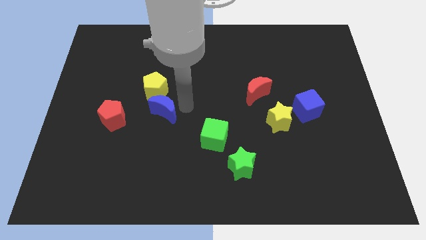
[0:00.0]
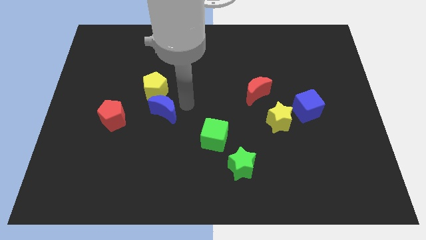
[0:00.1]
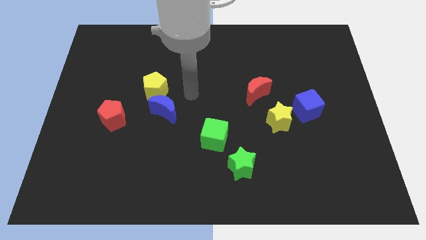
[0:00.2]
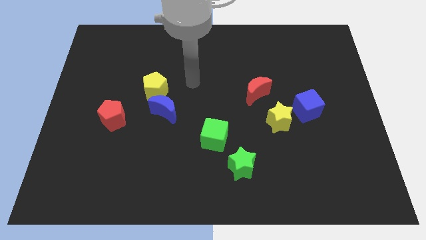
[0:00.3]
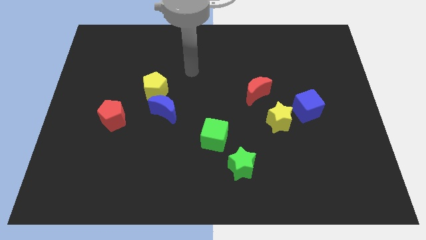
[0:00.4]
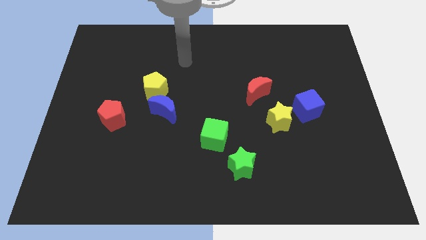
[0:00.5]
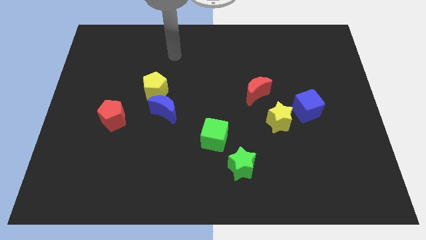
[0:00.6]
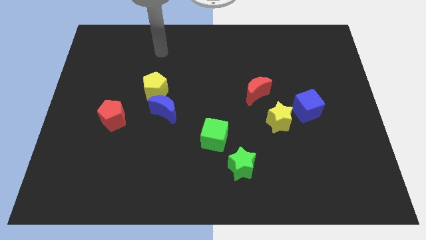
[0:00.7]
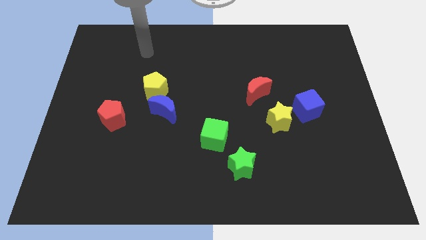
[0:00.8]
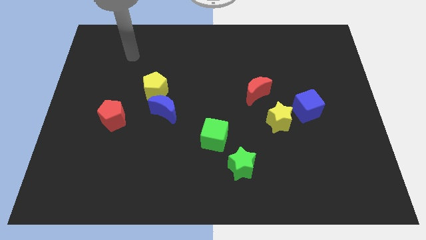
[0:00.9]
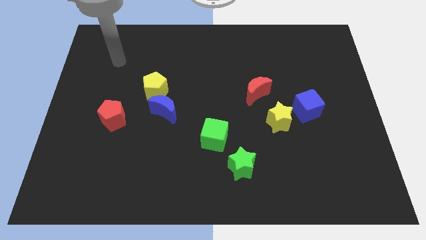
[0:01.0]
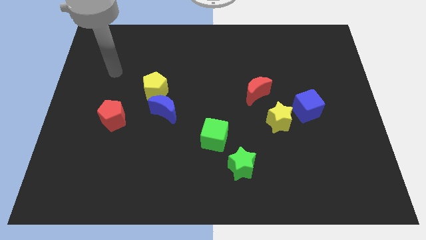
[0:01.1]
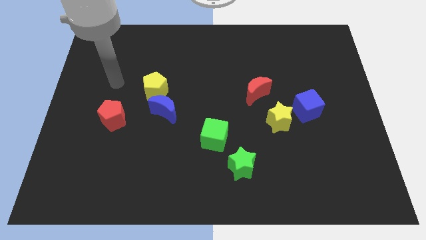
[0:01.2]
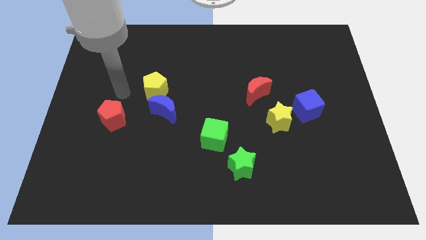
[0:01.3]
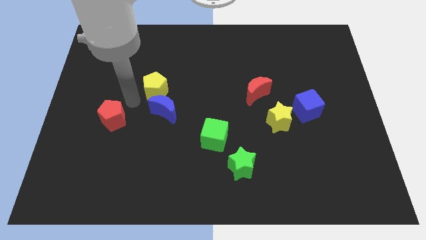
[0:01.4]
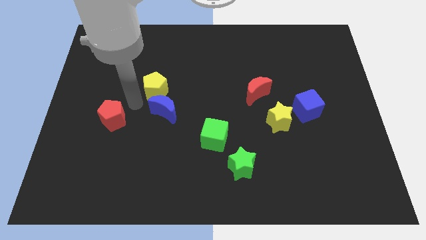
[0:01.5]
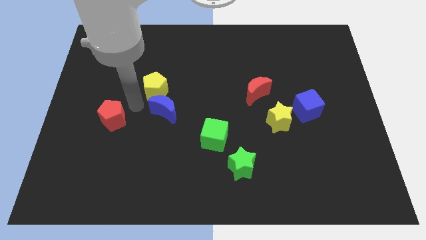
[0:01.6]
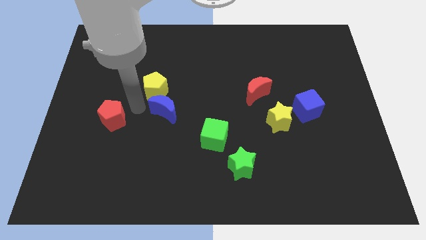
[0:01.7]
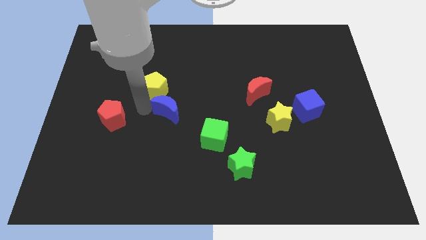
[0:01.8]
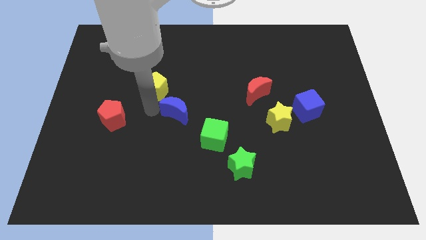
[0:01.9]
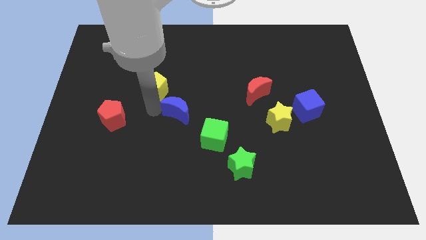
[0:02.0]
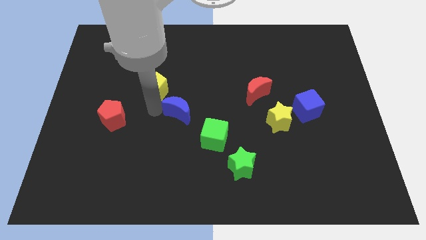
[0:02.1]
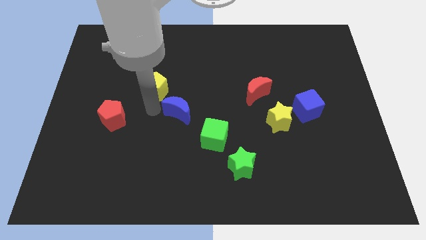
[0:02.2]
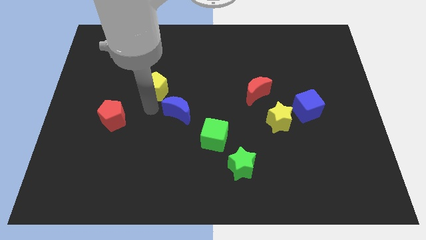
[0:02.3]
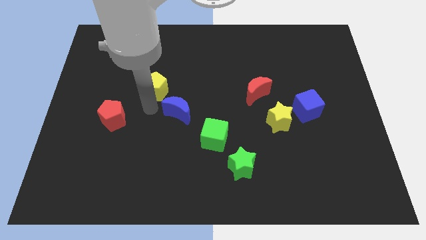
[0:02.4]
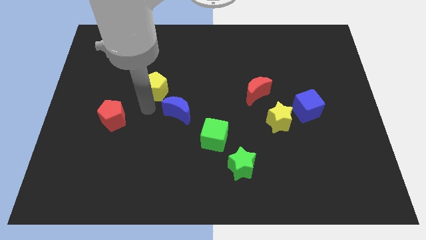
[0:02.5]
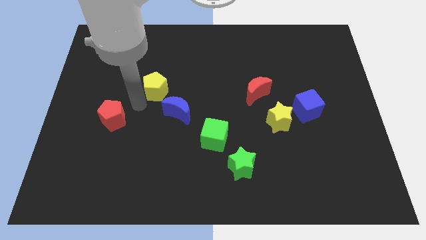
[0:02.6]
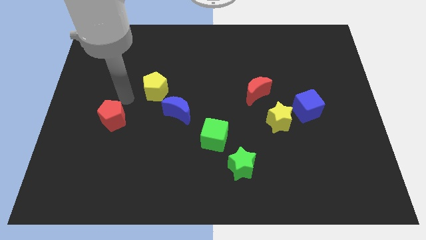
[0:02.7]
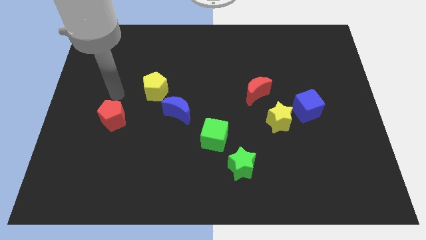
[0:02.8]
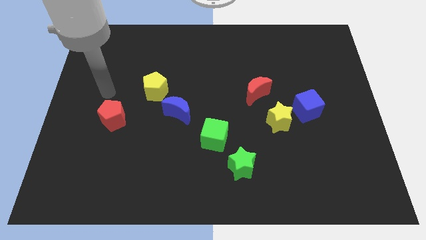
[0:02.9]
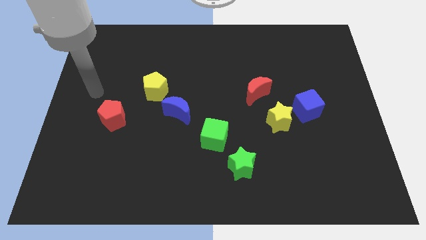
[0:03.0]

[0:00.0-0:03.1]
move the blue moon between the yellow pentagon and the green cube

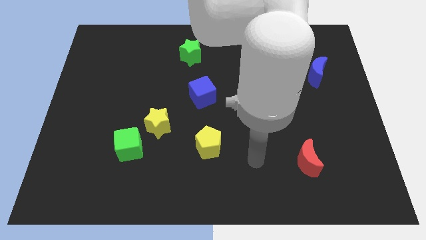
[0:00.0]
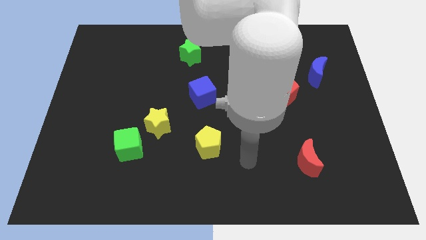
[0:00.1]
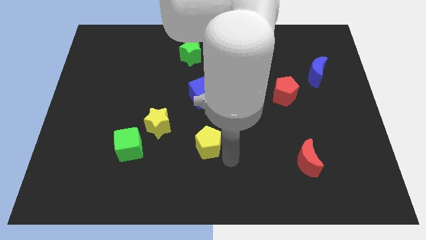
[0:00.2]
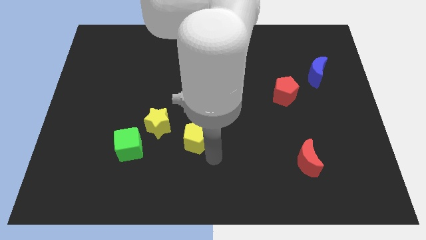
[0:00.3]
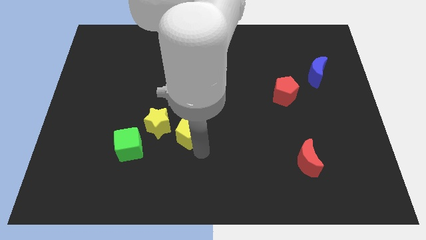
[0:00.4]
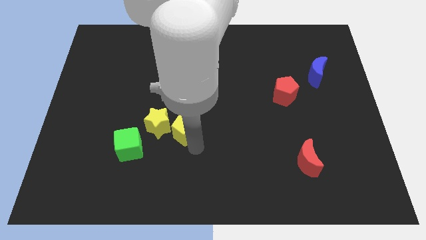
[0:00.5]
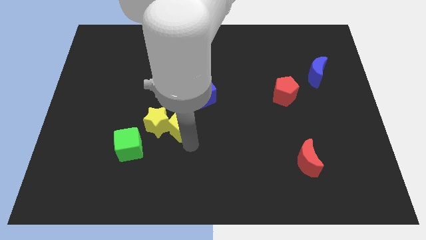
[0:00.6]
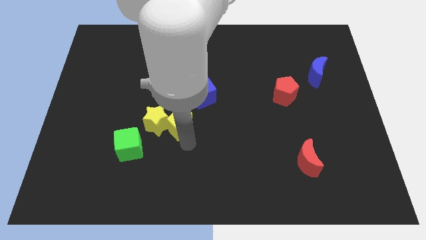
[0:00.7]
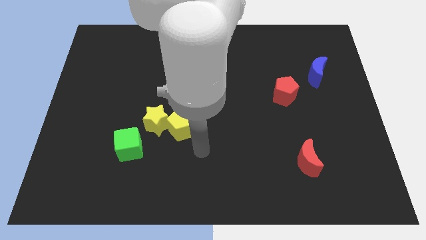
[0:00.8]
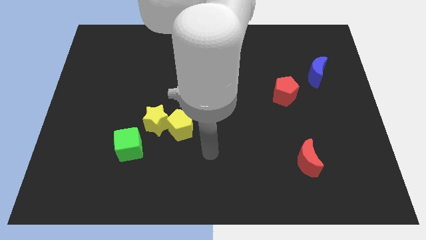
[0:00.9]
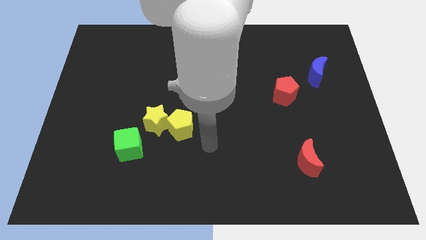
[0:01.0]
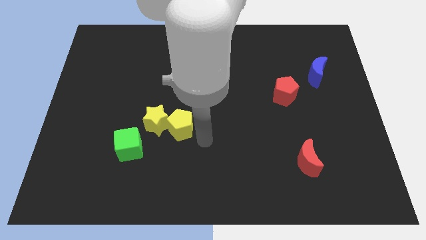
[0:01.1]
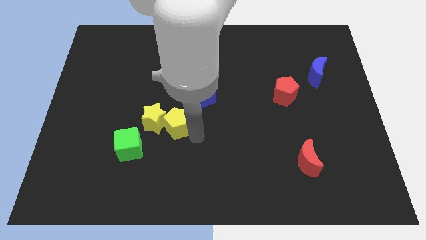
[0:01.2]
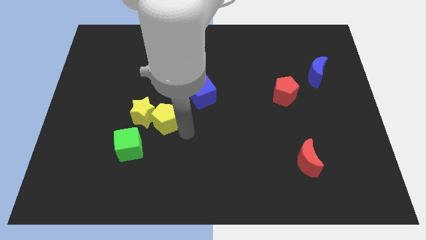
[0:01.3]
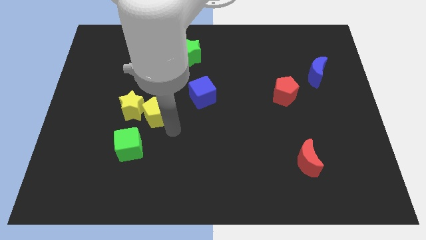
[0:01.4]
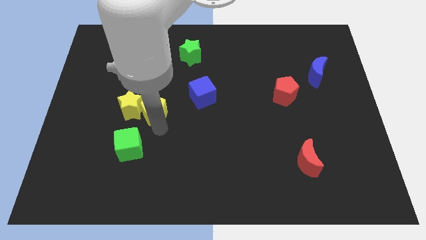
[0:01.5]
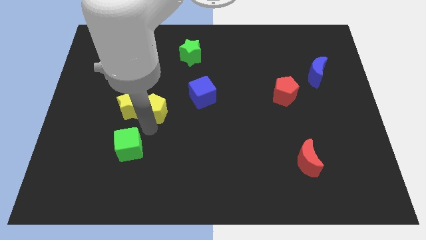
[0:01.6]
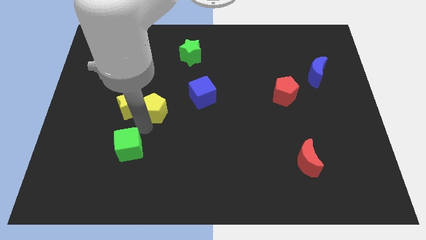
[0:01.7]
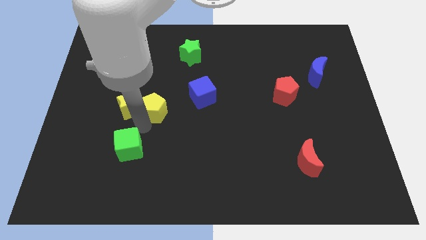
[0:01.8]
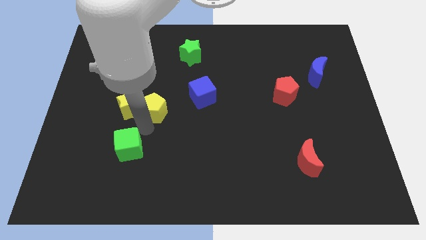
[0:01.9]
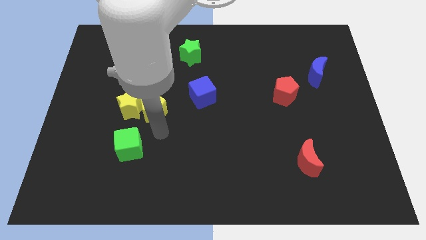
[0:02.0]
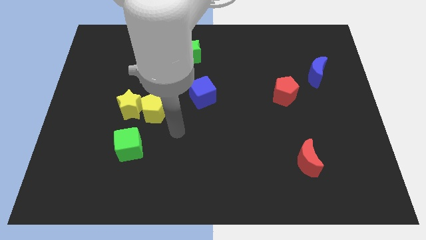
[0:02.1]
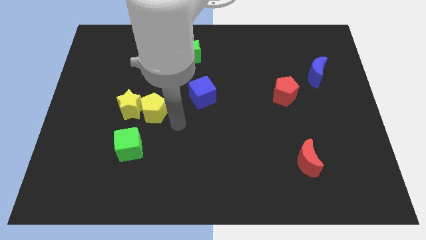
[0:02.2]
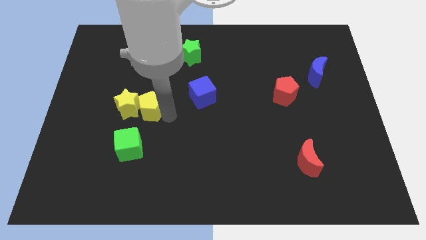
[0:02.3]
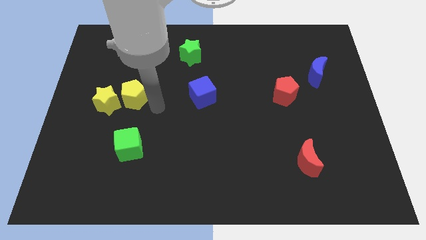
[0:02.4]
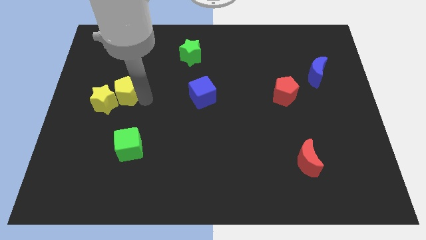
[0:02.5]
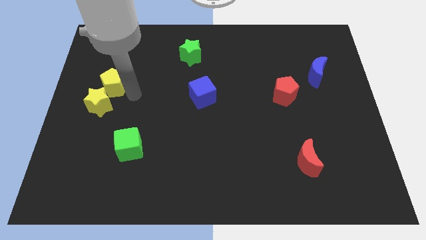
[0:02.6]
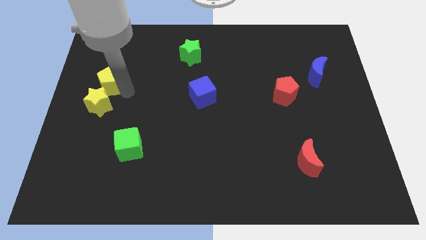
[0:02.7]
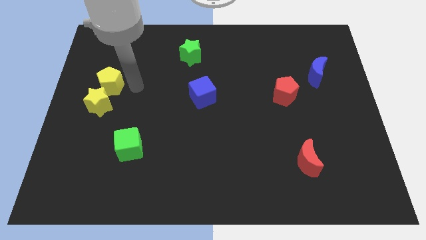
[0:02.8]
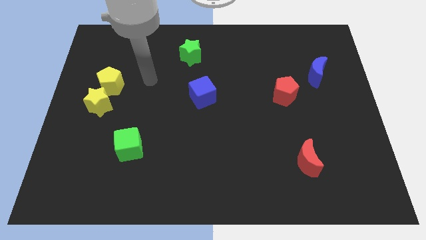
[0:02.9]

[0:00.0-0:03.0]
place the yellow pentagon above the yellow star

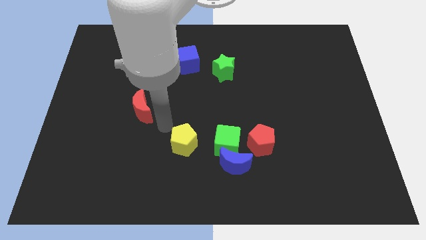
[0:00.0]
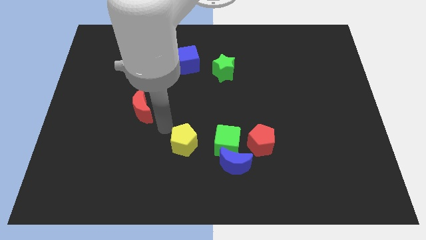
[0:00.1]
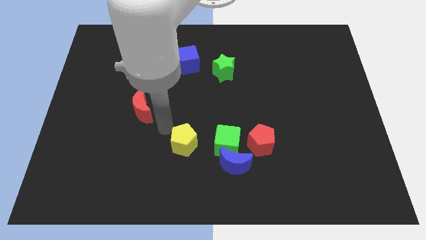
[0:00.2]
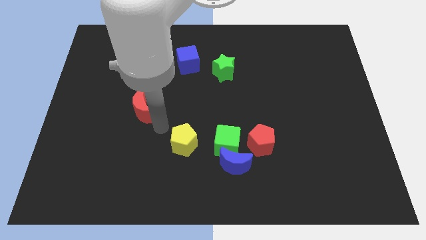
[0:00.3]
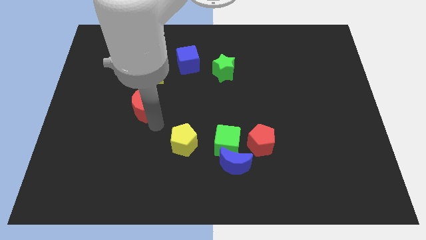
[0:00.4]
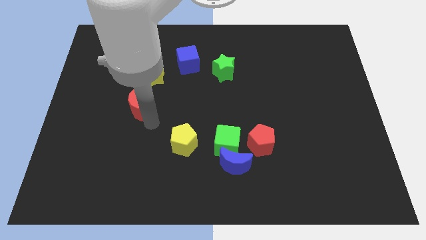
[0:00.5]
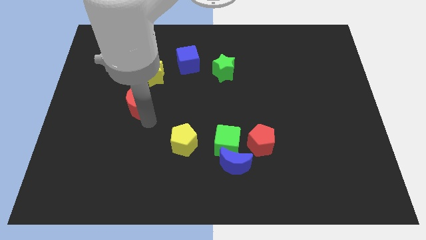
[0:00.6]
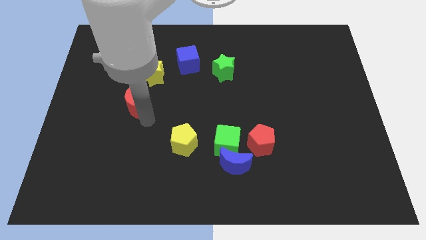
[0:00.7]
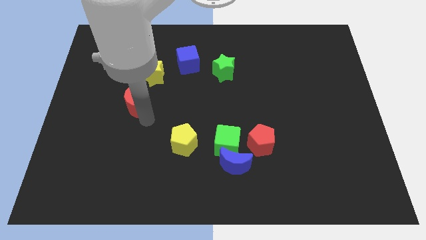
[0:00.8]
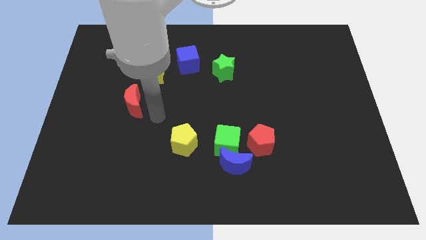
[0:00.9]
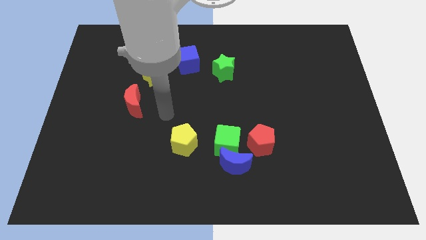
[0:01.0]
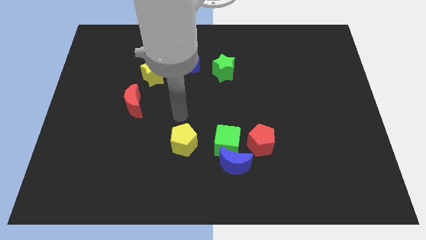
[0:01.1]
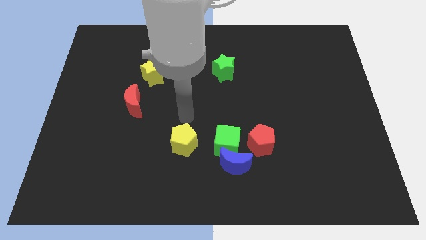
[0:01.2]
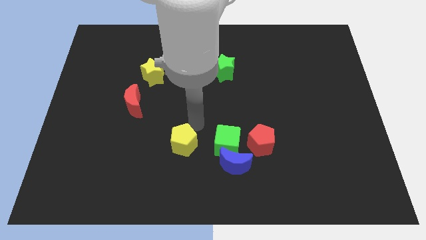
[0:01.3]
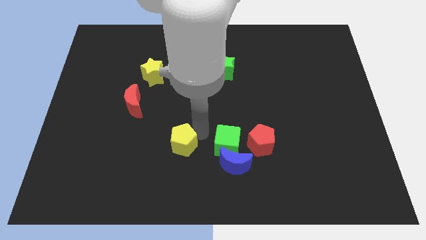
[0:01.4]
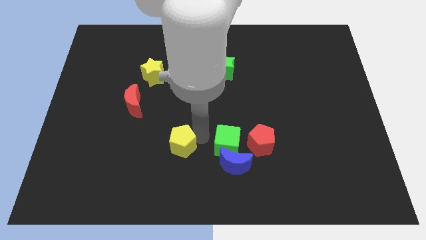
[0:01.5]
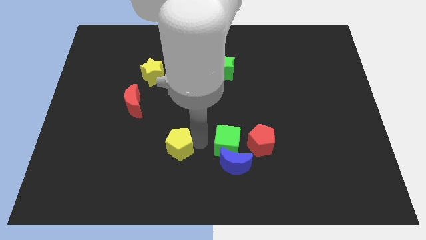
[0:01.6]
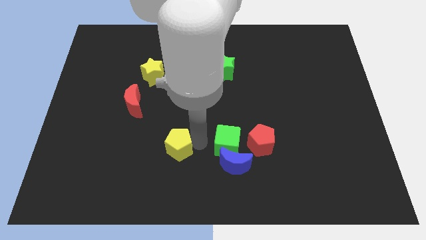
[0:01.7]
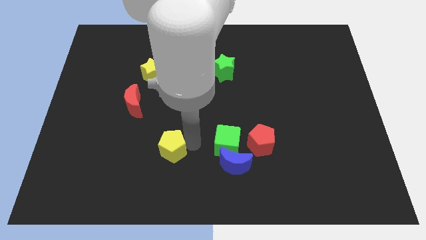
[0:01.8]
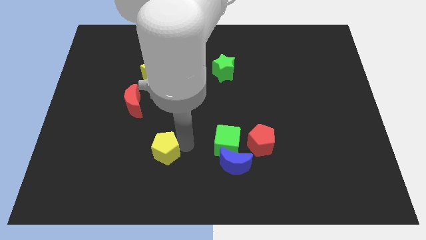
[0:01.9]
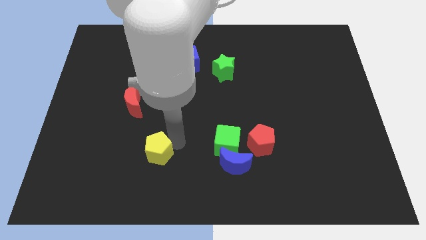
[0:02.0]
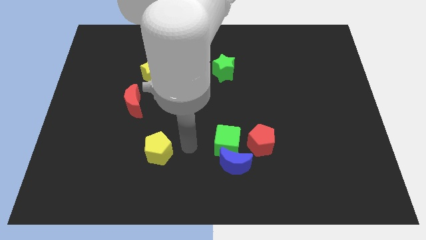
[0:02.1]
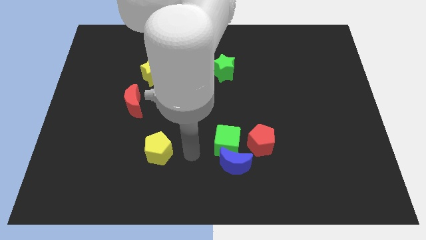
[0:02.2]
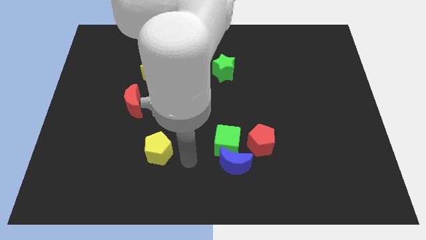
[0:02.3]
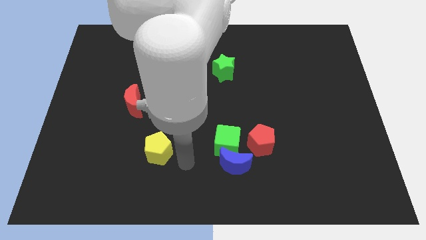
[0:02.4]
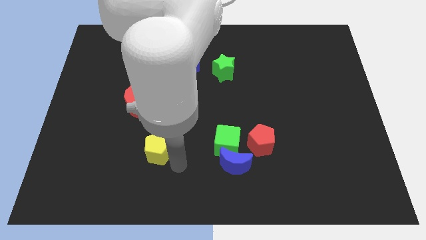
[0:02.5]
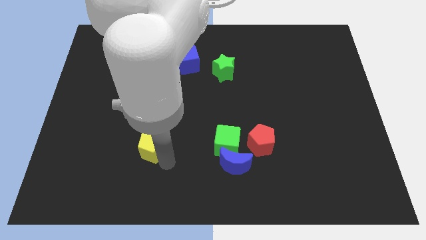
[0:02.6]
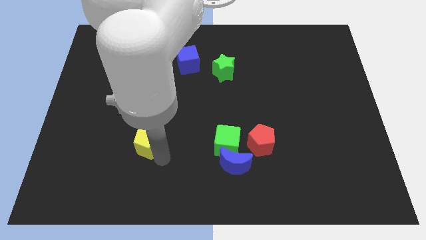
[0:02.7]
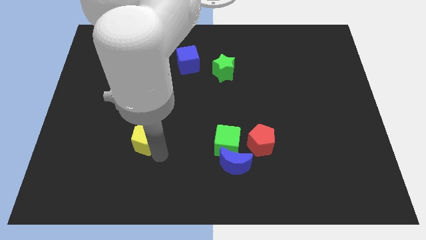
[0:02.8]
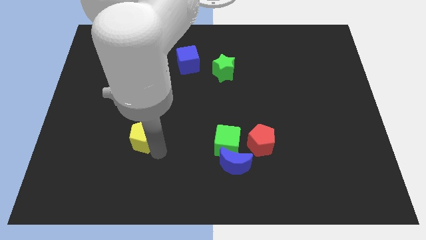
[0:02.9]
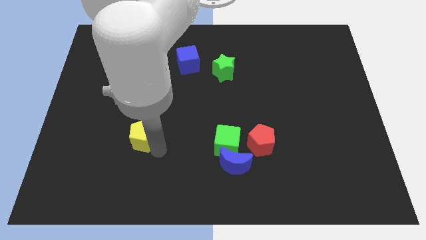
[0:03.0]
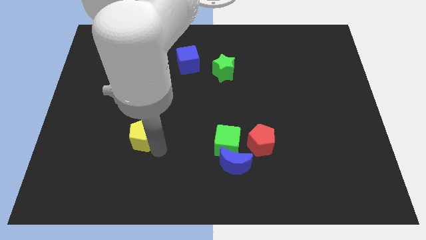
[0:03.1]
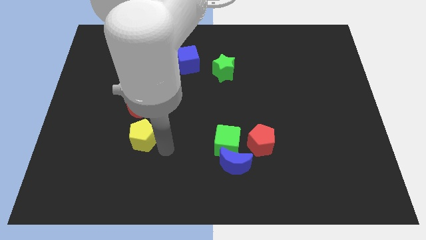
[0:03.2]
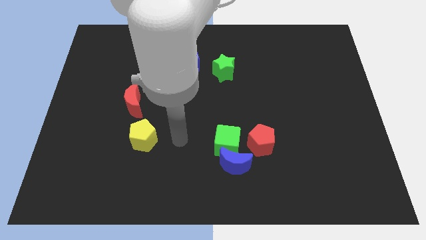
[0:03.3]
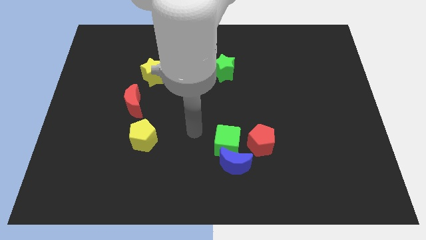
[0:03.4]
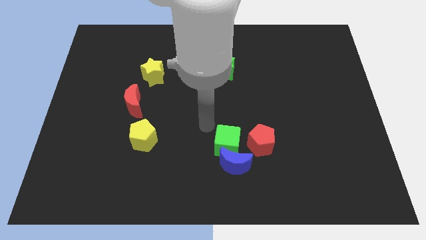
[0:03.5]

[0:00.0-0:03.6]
move yellow pentagon to the bottom left of the board
